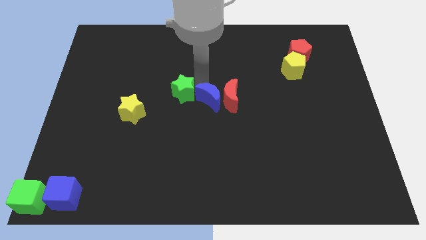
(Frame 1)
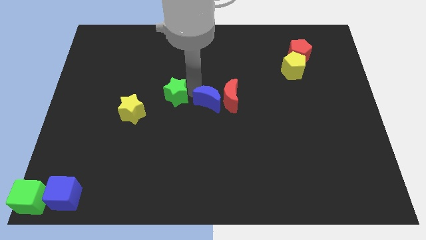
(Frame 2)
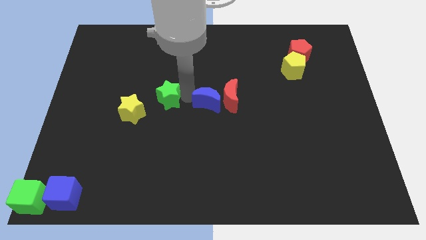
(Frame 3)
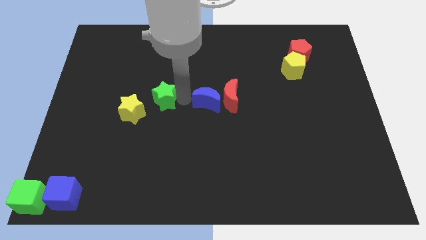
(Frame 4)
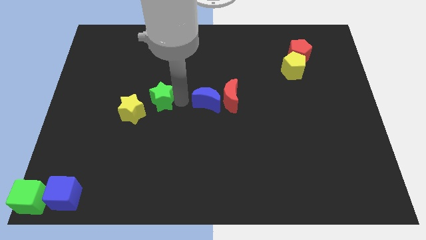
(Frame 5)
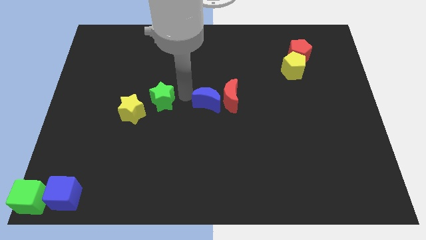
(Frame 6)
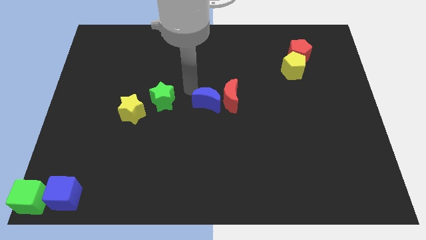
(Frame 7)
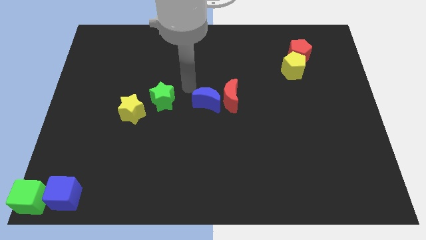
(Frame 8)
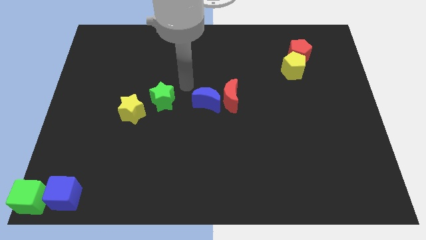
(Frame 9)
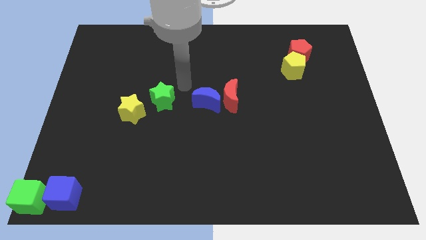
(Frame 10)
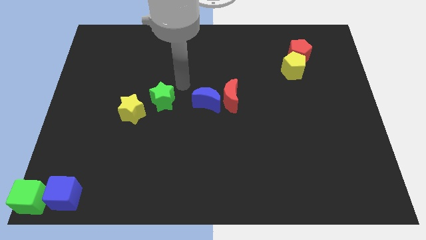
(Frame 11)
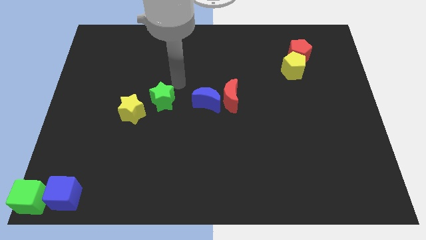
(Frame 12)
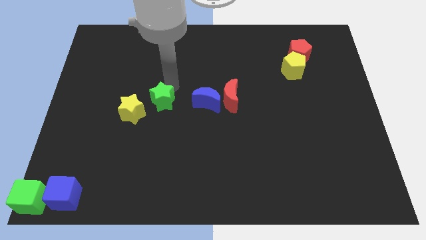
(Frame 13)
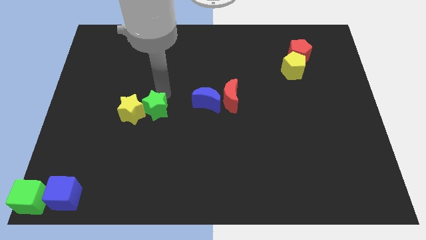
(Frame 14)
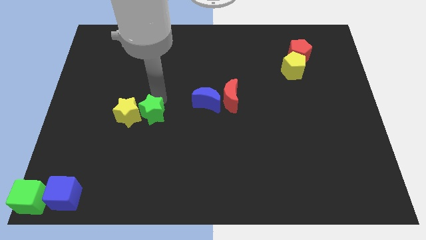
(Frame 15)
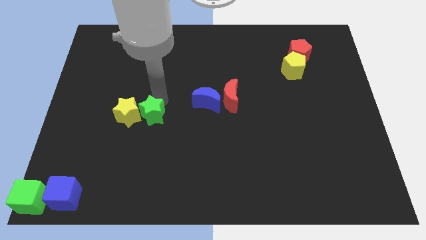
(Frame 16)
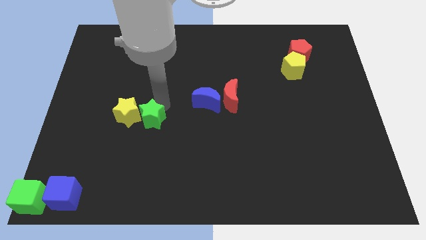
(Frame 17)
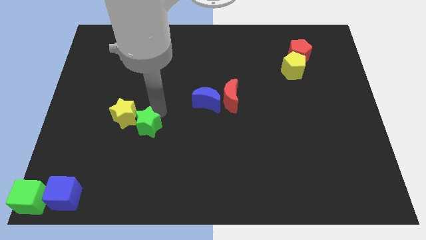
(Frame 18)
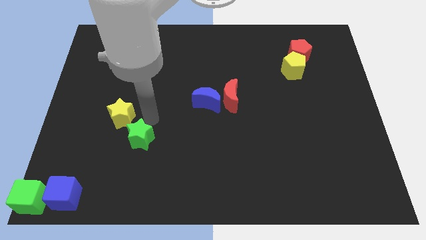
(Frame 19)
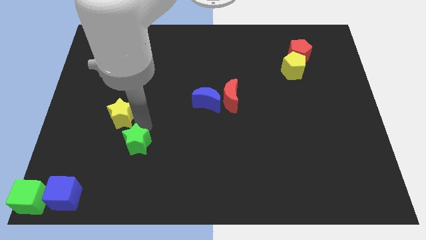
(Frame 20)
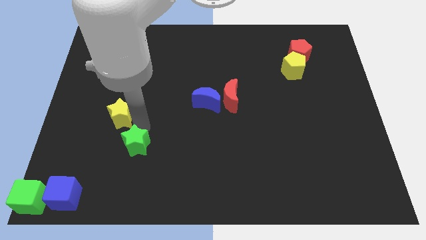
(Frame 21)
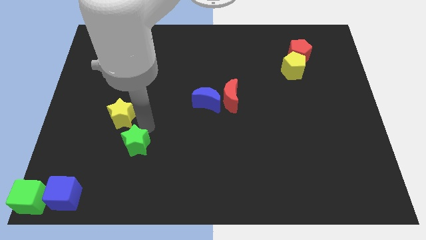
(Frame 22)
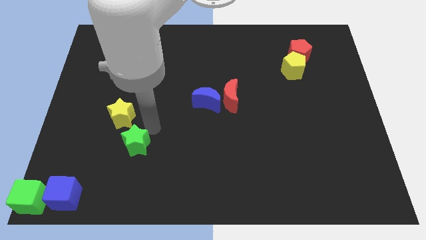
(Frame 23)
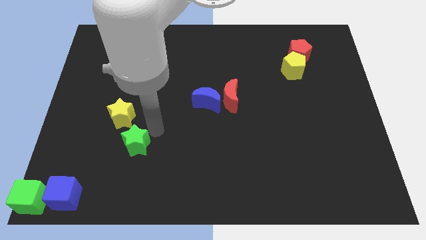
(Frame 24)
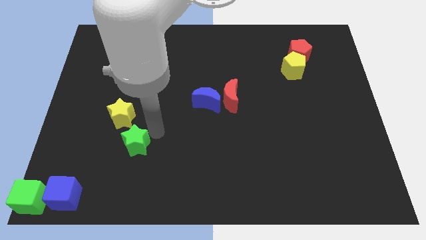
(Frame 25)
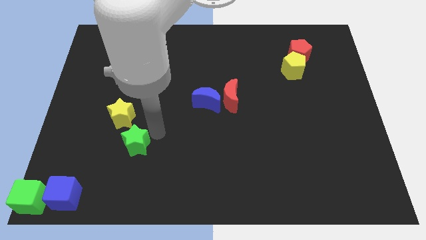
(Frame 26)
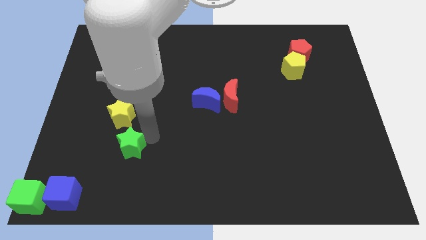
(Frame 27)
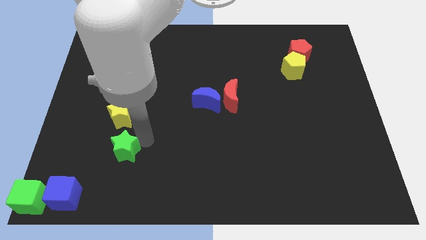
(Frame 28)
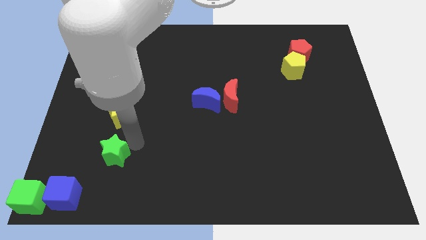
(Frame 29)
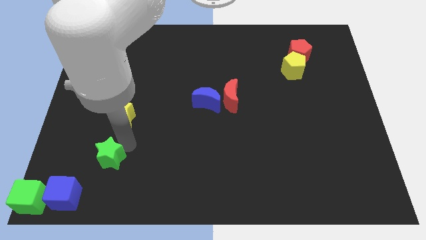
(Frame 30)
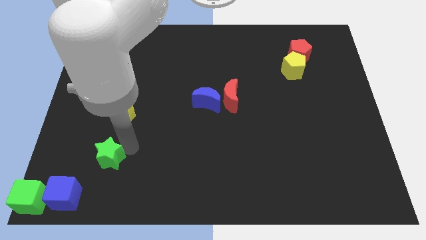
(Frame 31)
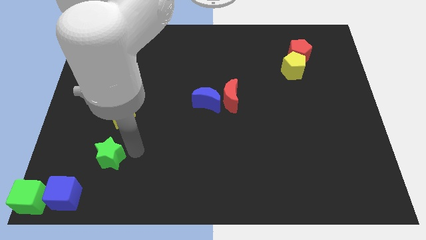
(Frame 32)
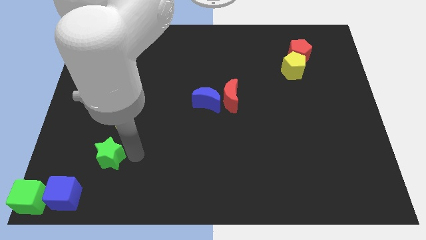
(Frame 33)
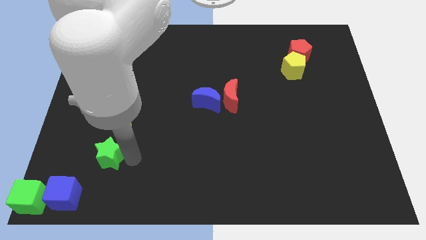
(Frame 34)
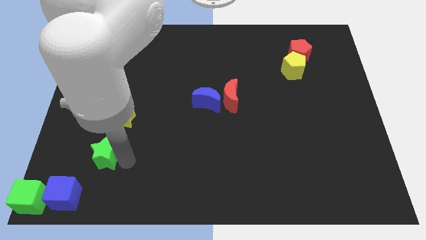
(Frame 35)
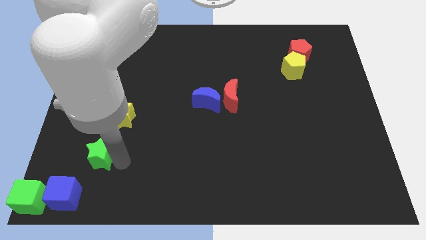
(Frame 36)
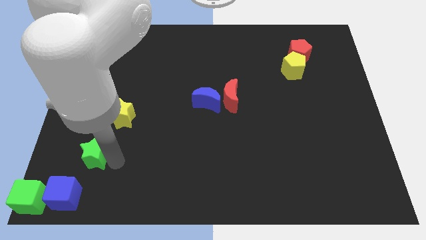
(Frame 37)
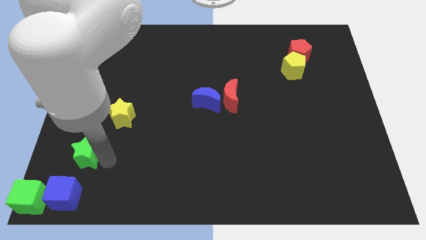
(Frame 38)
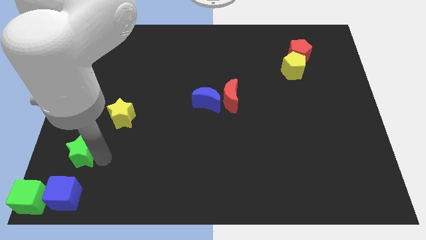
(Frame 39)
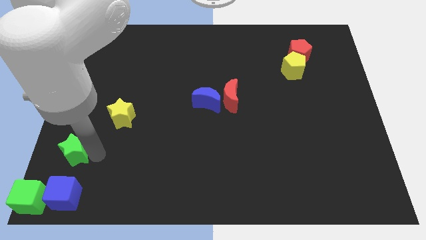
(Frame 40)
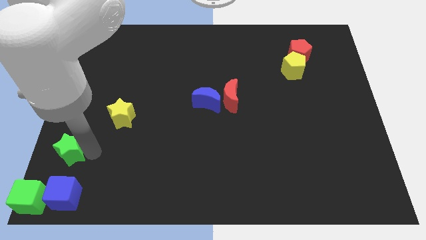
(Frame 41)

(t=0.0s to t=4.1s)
move green star above blue cube

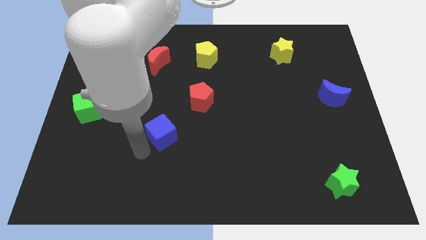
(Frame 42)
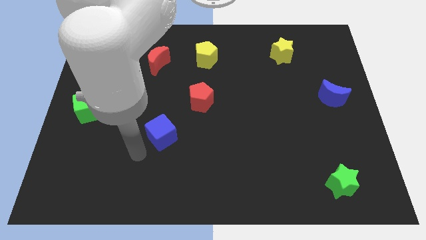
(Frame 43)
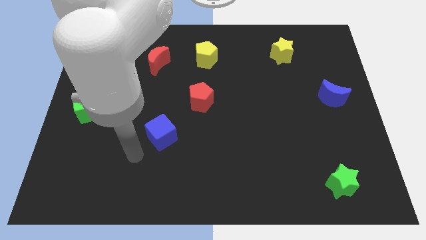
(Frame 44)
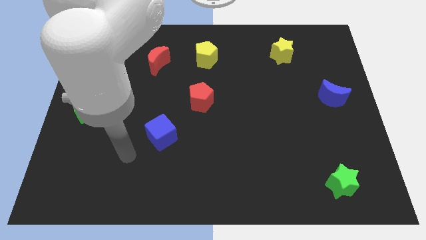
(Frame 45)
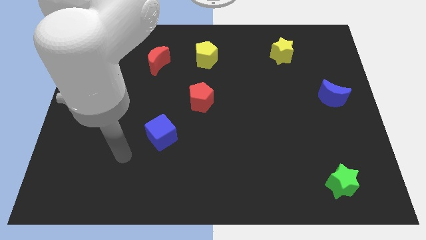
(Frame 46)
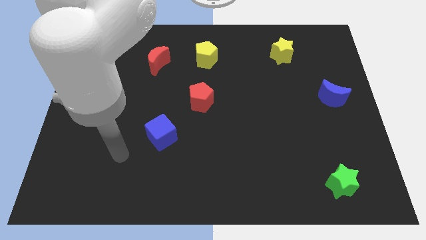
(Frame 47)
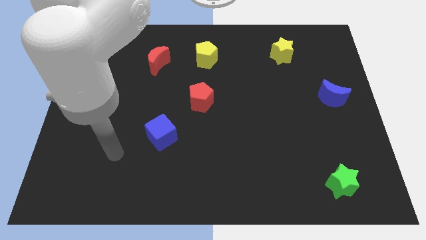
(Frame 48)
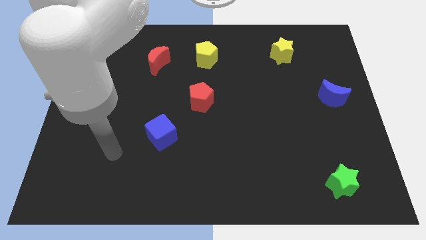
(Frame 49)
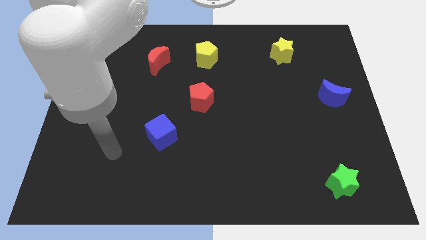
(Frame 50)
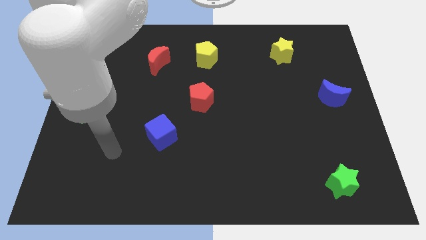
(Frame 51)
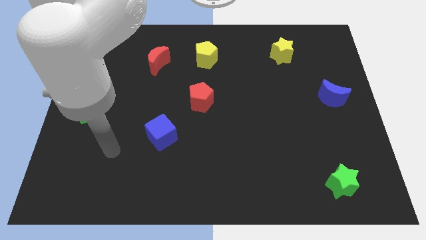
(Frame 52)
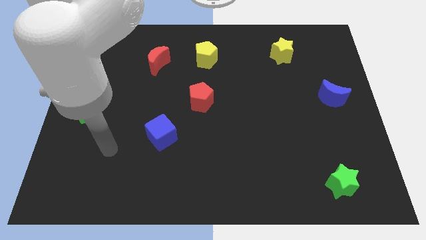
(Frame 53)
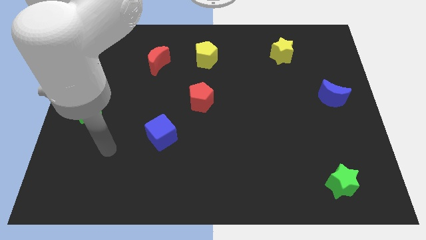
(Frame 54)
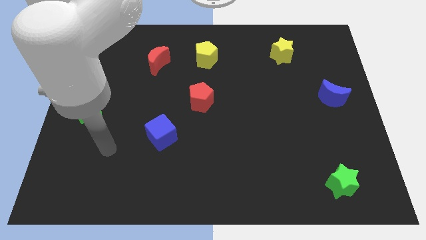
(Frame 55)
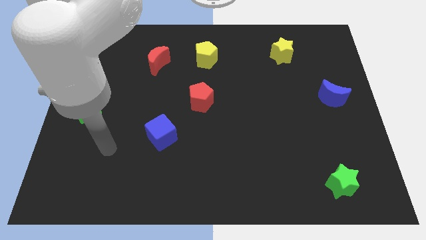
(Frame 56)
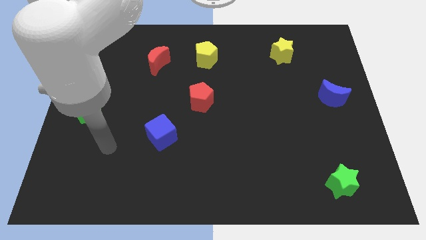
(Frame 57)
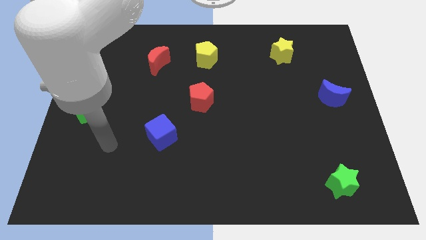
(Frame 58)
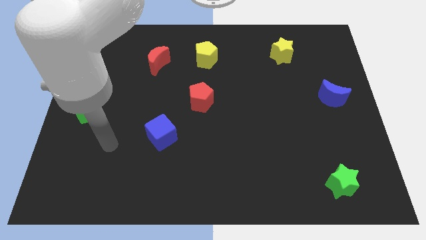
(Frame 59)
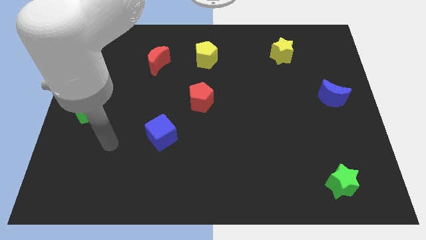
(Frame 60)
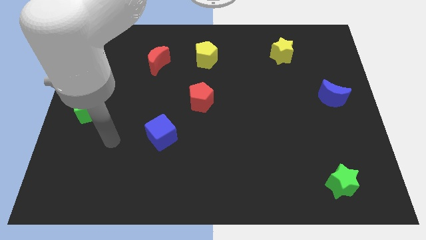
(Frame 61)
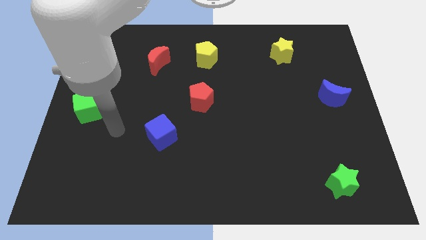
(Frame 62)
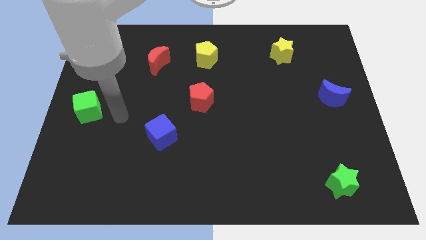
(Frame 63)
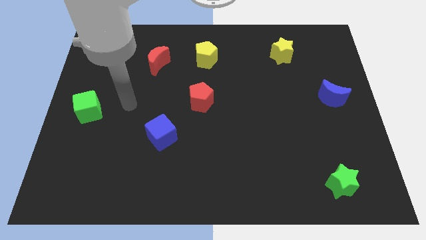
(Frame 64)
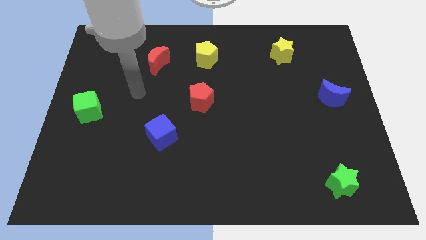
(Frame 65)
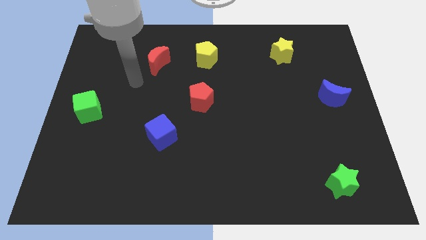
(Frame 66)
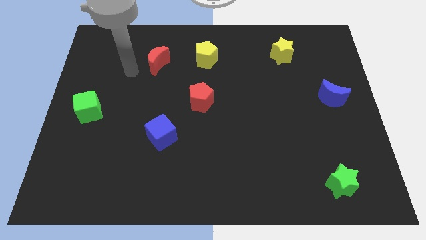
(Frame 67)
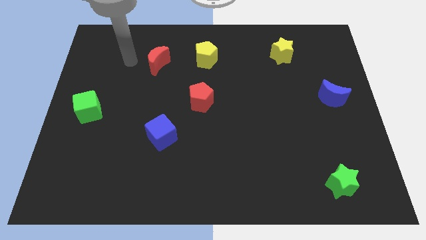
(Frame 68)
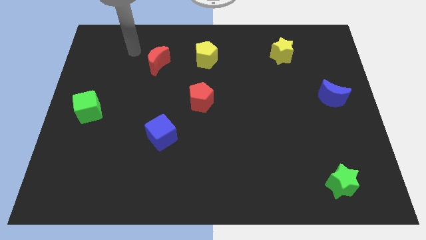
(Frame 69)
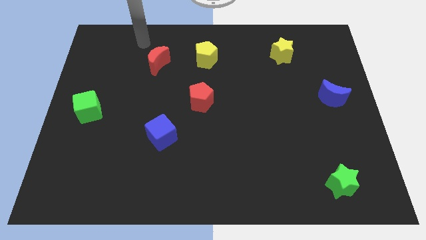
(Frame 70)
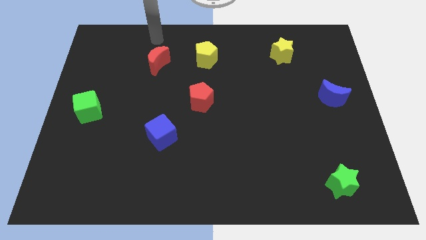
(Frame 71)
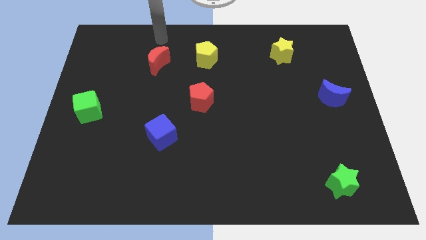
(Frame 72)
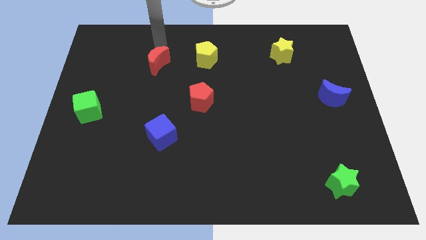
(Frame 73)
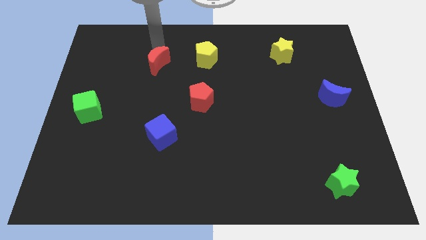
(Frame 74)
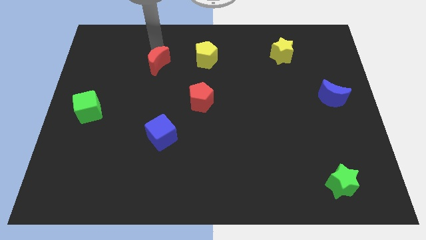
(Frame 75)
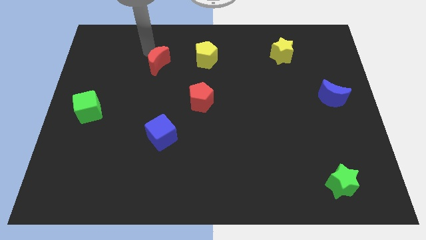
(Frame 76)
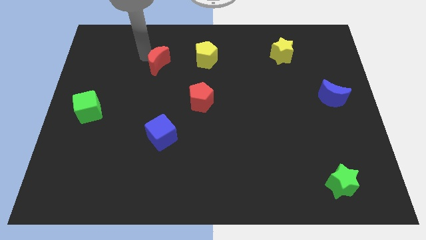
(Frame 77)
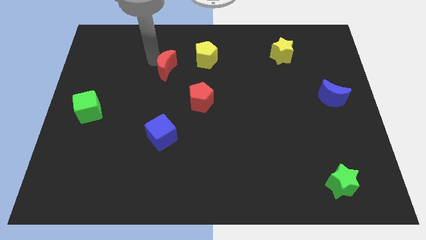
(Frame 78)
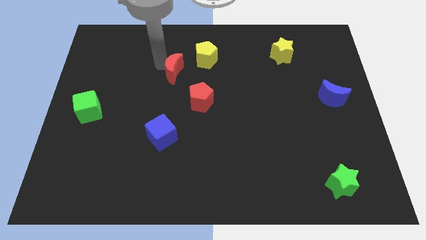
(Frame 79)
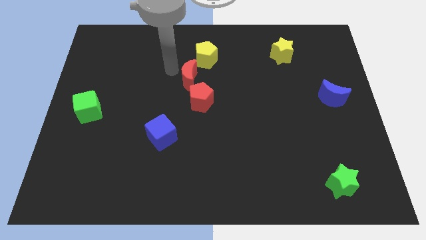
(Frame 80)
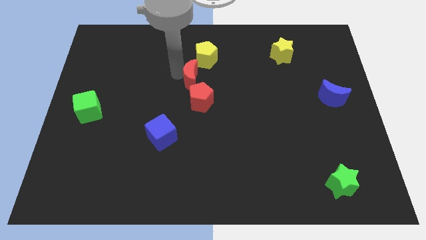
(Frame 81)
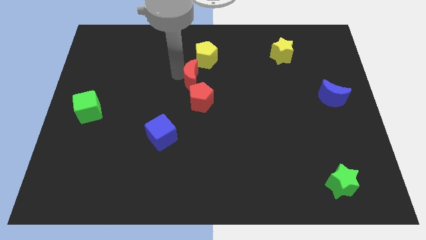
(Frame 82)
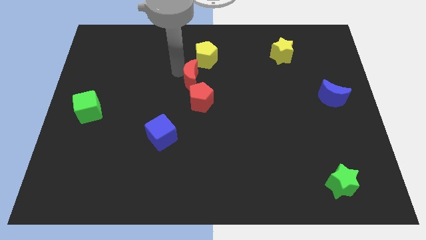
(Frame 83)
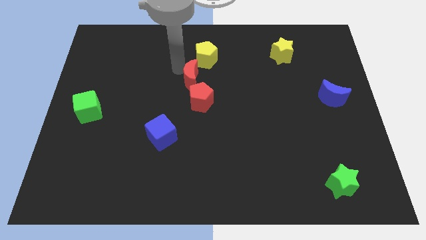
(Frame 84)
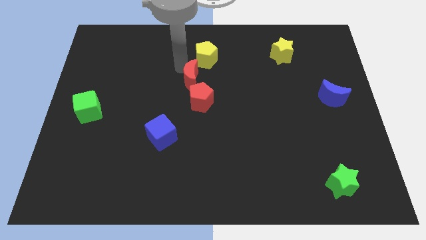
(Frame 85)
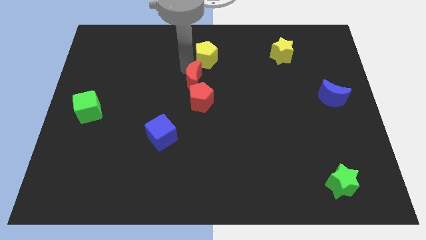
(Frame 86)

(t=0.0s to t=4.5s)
place the red moon in between the yellow pentagon and the red pentagon

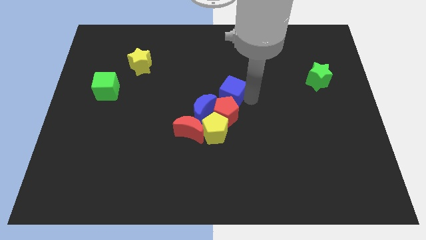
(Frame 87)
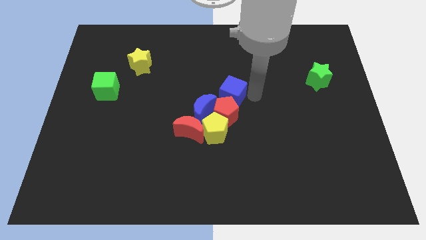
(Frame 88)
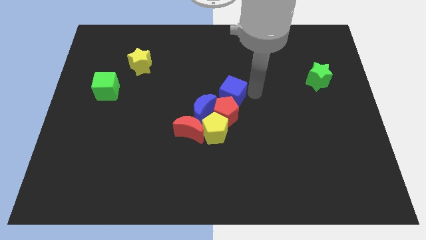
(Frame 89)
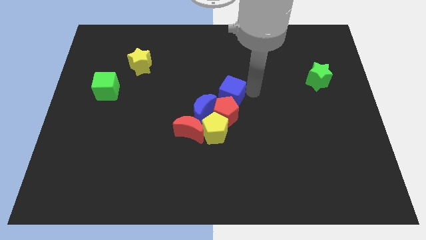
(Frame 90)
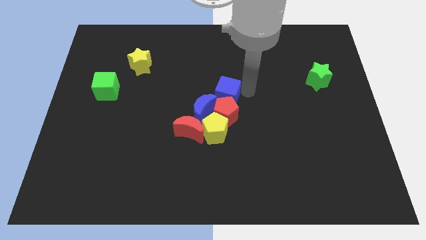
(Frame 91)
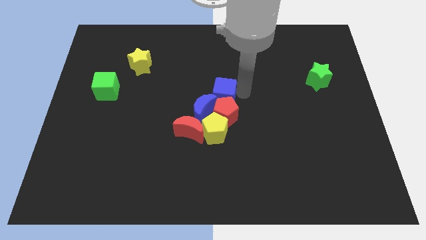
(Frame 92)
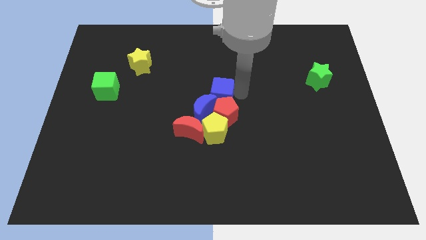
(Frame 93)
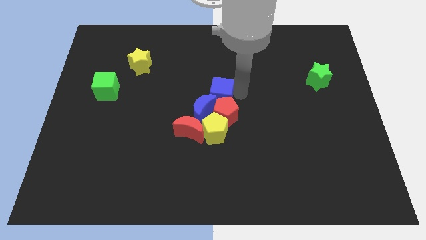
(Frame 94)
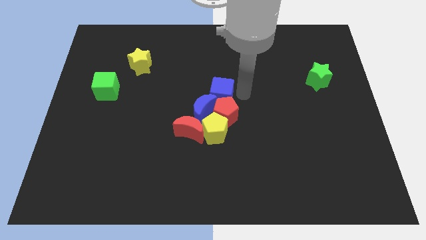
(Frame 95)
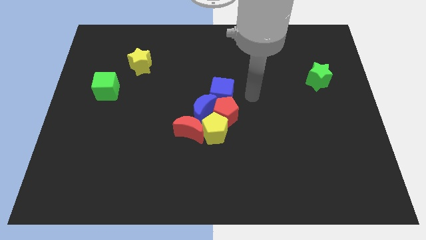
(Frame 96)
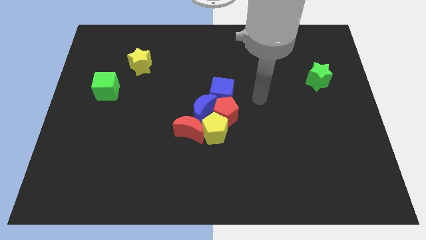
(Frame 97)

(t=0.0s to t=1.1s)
place the blue cube on top of the blue crescent to form a diagnoal line
